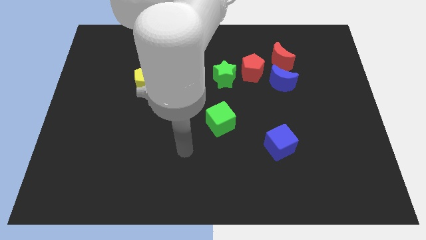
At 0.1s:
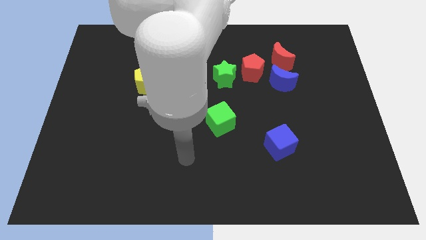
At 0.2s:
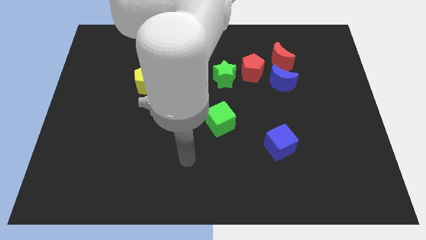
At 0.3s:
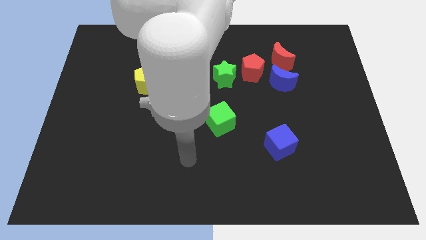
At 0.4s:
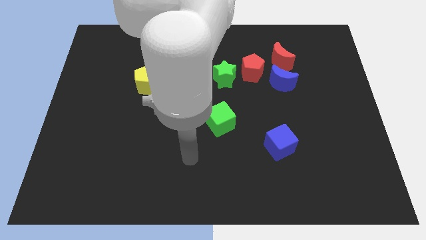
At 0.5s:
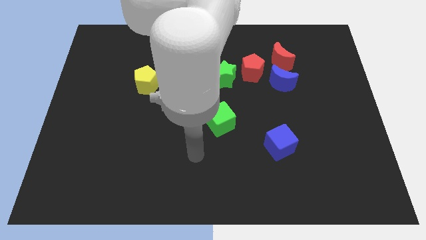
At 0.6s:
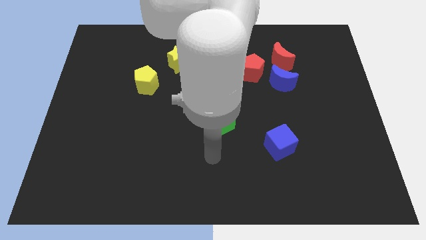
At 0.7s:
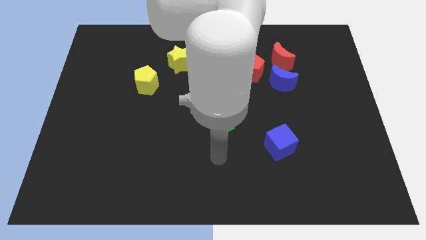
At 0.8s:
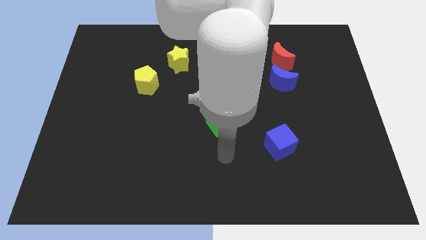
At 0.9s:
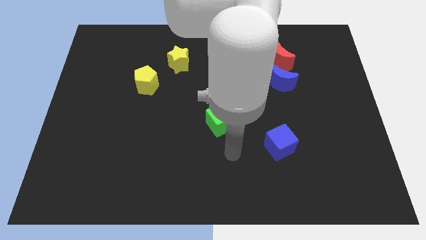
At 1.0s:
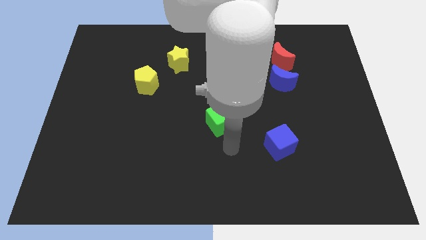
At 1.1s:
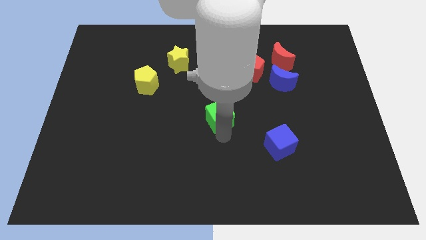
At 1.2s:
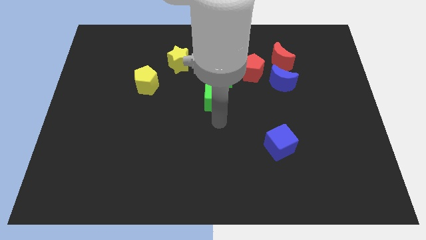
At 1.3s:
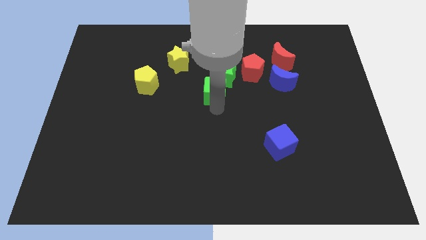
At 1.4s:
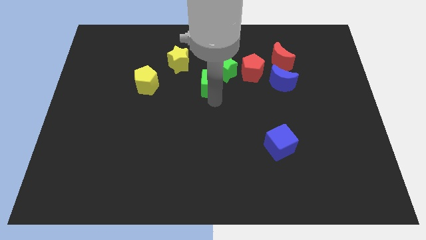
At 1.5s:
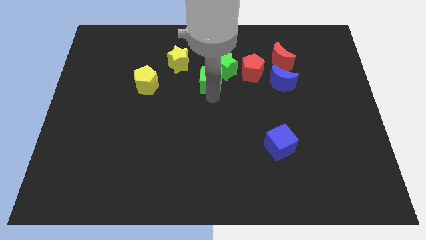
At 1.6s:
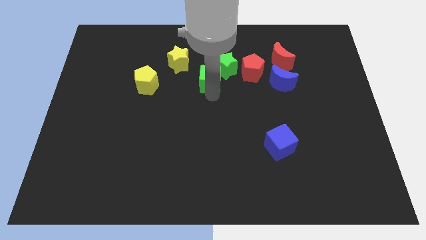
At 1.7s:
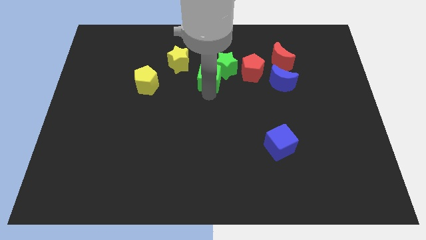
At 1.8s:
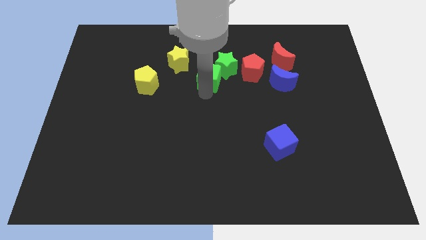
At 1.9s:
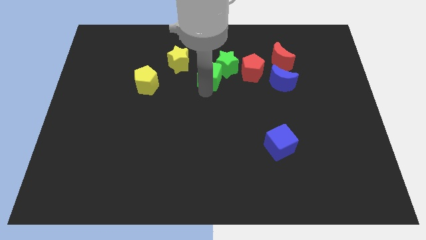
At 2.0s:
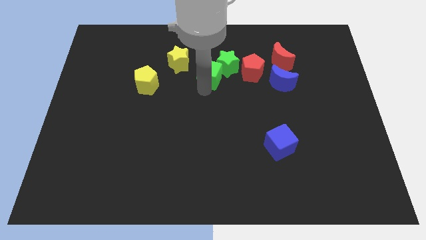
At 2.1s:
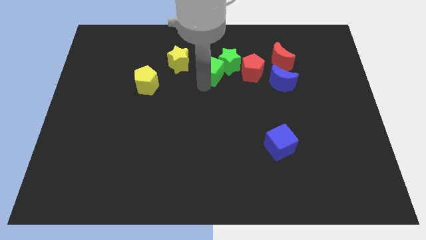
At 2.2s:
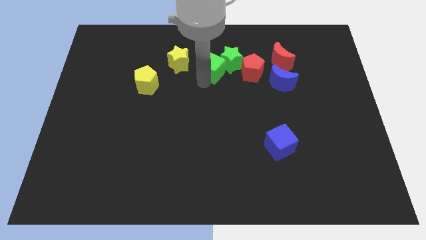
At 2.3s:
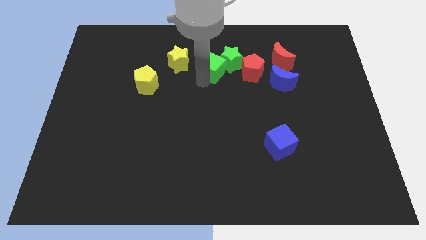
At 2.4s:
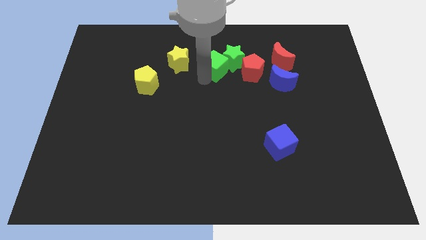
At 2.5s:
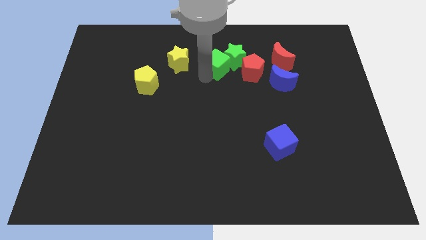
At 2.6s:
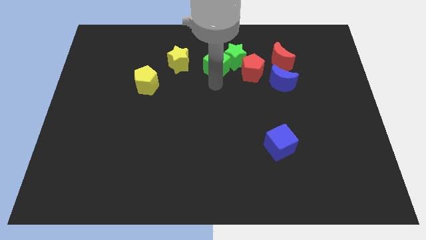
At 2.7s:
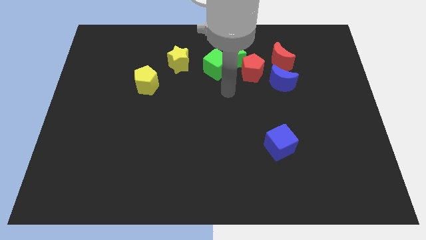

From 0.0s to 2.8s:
move the green cubes to the top

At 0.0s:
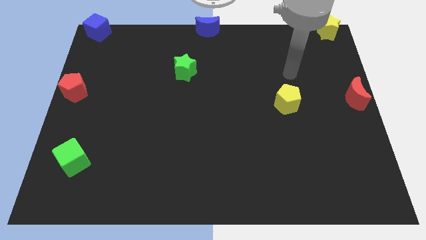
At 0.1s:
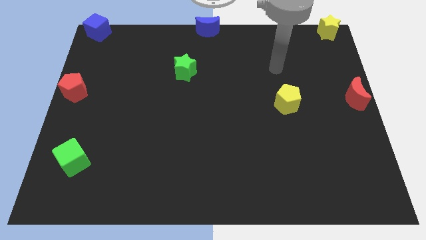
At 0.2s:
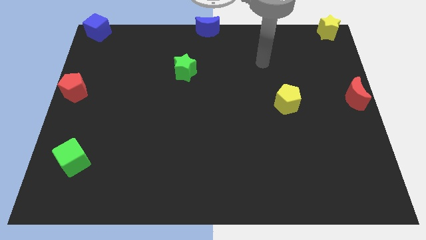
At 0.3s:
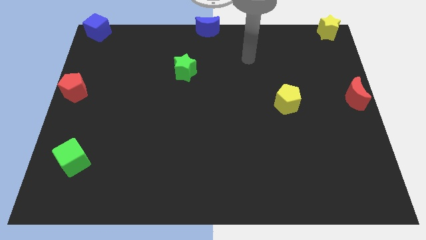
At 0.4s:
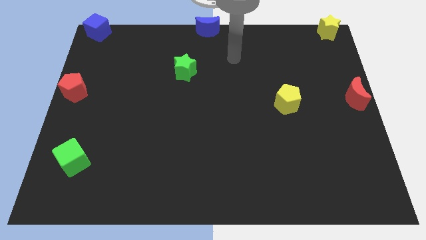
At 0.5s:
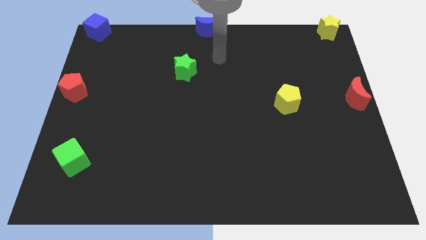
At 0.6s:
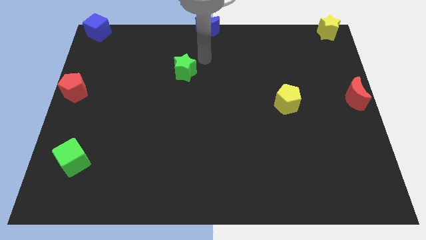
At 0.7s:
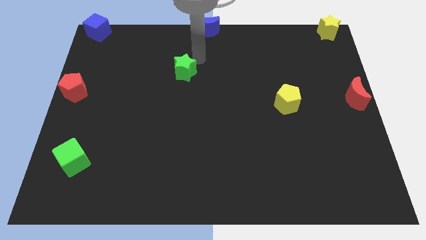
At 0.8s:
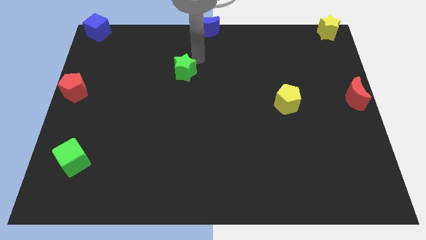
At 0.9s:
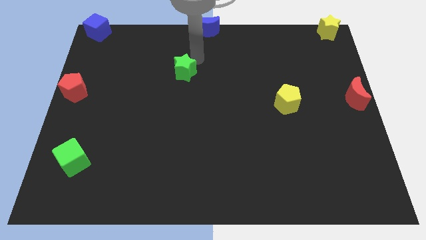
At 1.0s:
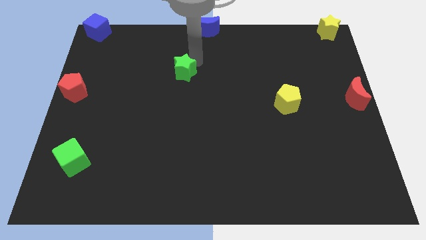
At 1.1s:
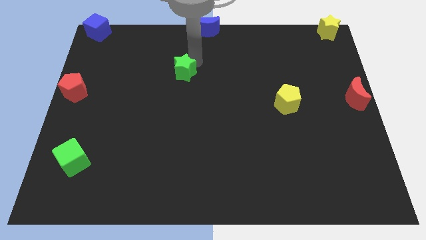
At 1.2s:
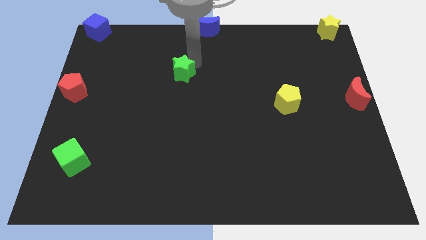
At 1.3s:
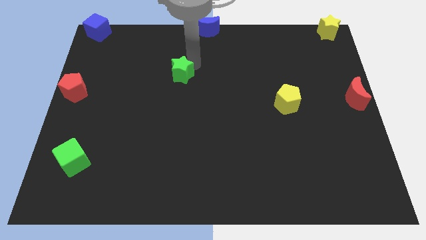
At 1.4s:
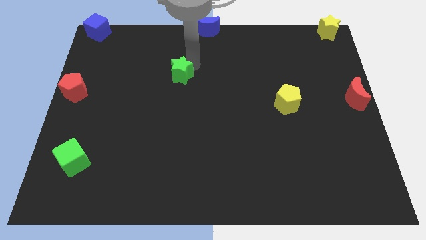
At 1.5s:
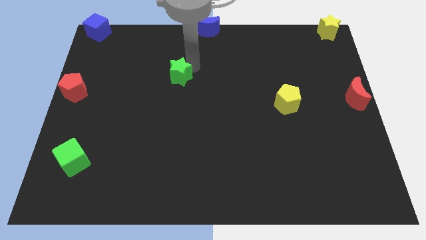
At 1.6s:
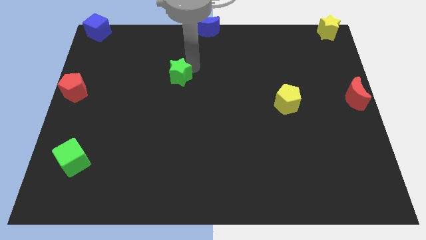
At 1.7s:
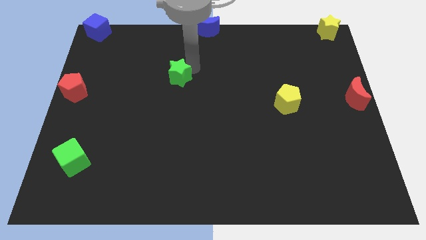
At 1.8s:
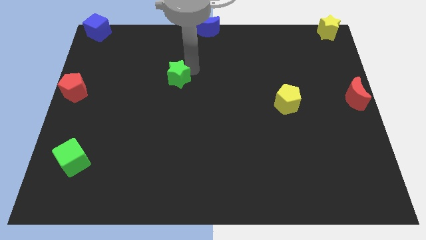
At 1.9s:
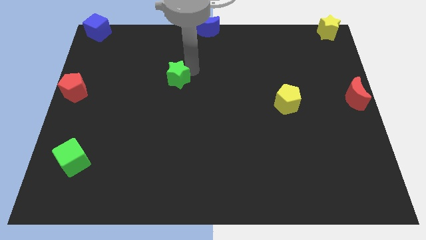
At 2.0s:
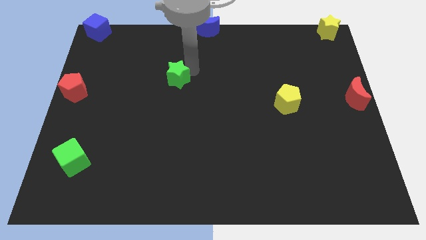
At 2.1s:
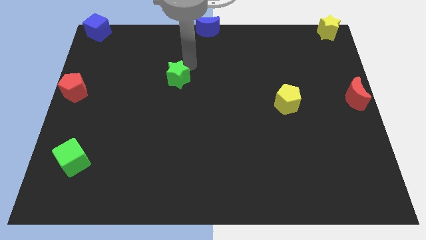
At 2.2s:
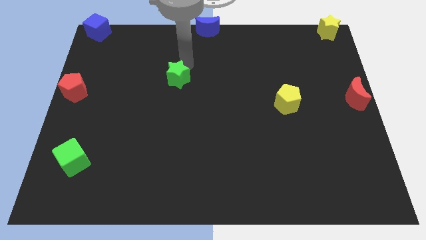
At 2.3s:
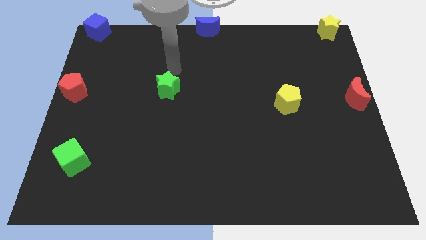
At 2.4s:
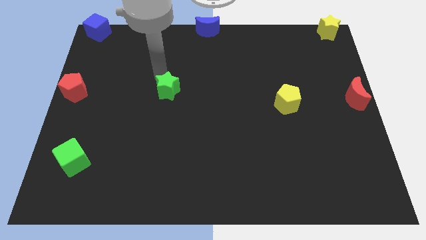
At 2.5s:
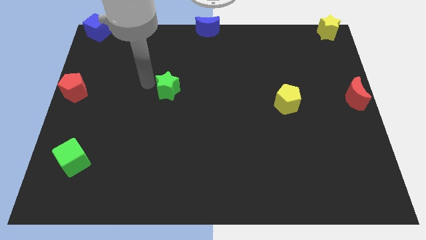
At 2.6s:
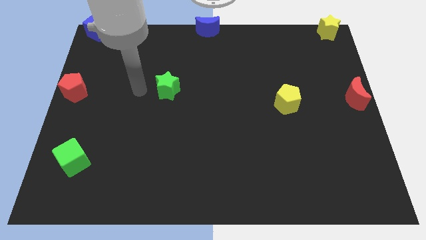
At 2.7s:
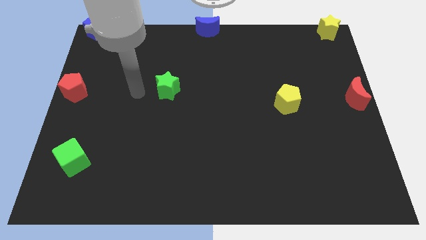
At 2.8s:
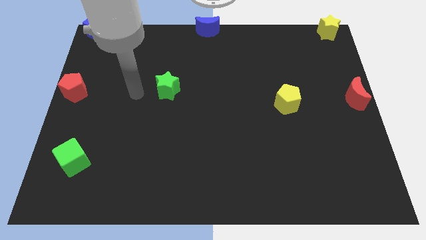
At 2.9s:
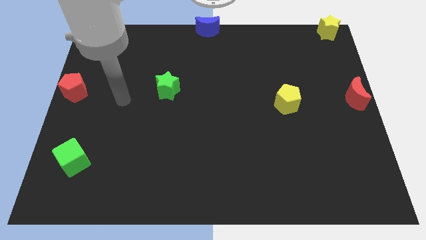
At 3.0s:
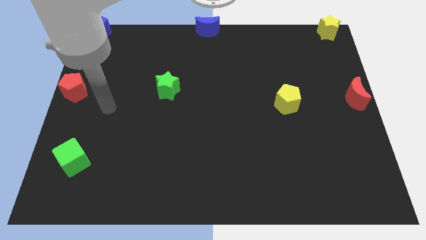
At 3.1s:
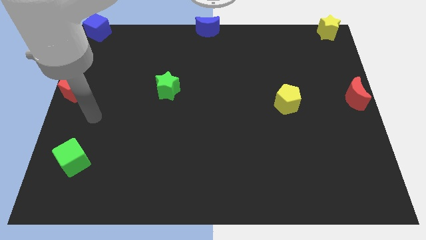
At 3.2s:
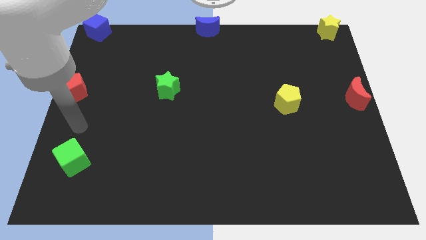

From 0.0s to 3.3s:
put the green star horizontally in between the red pentagon and yellow pentagon

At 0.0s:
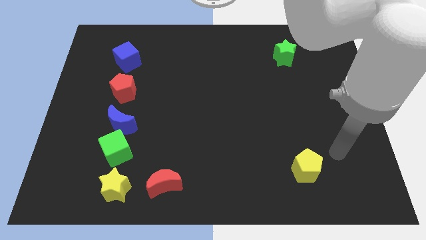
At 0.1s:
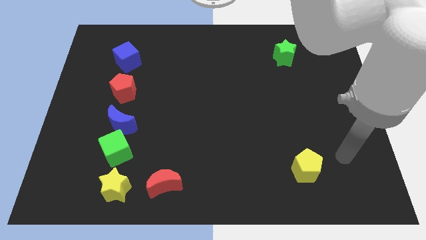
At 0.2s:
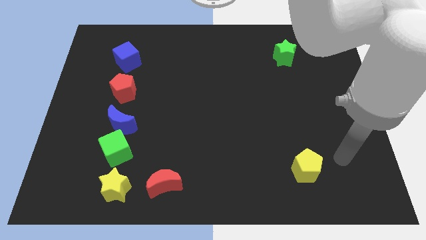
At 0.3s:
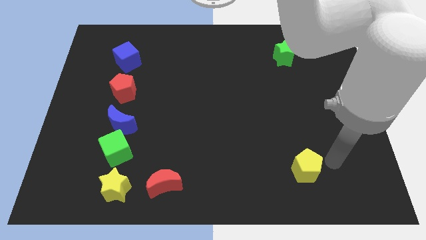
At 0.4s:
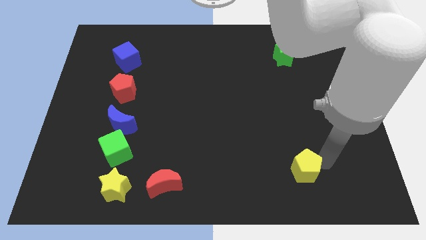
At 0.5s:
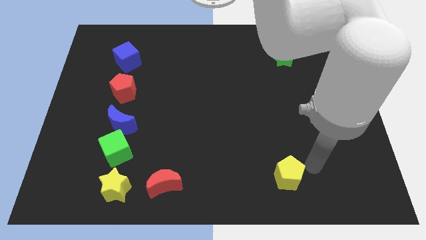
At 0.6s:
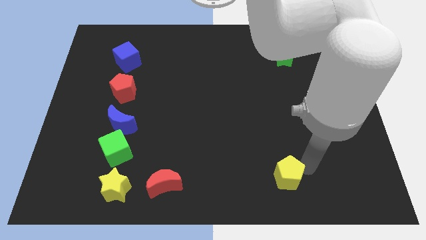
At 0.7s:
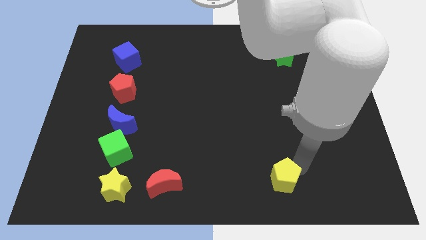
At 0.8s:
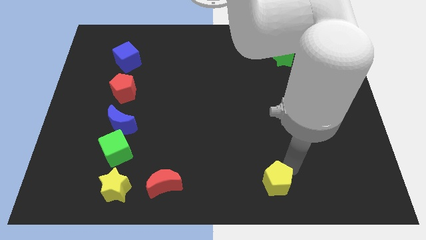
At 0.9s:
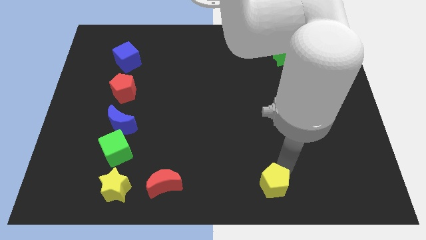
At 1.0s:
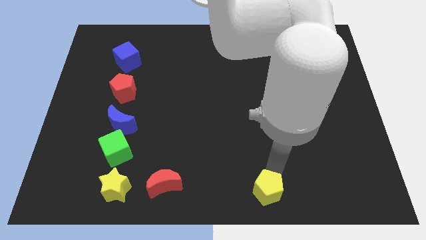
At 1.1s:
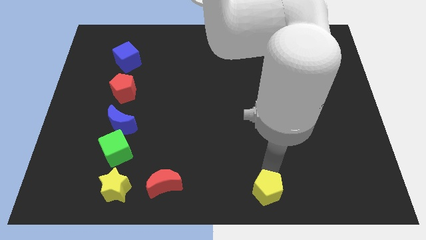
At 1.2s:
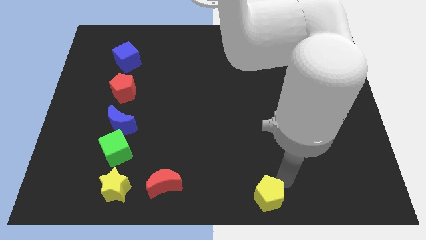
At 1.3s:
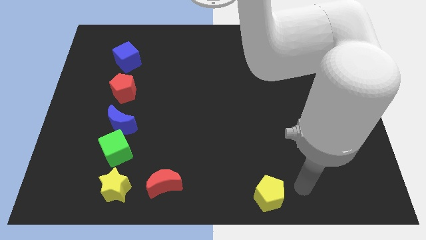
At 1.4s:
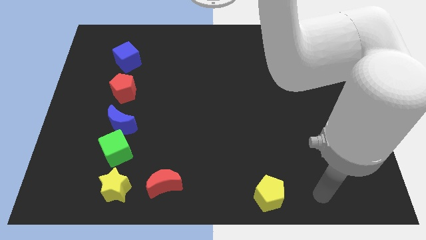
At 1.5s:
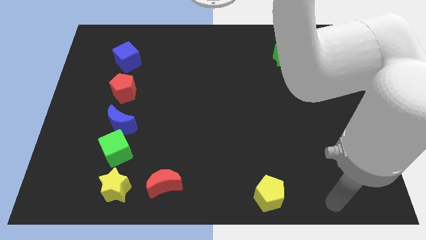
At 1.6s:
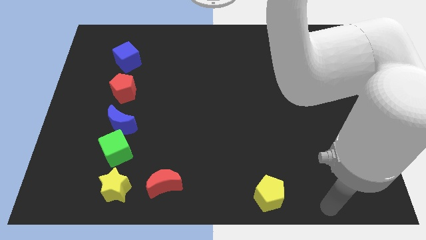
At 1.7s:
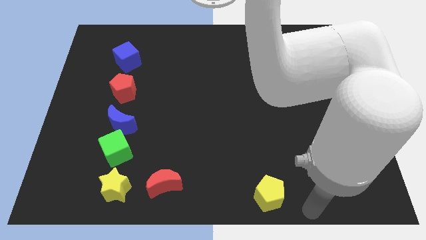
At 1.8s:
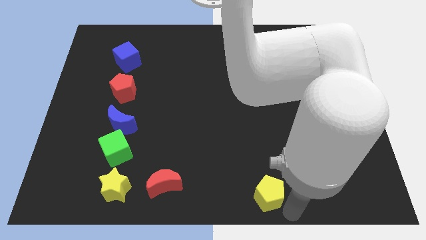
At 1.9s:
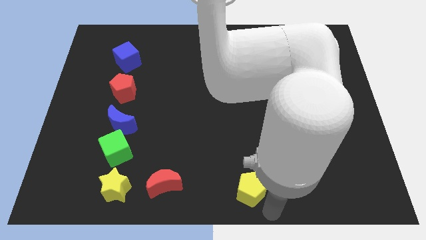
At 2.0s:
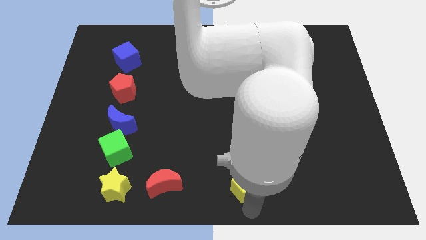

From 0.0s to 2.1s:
move yellow pentagon towards the bottom center

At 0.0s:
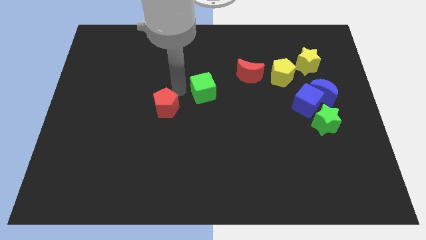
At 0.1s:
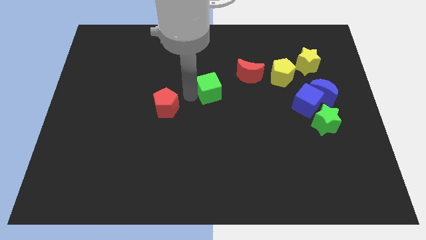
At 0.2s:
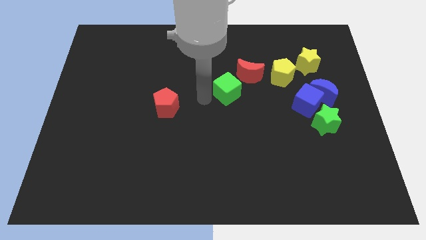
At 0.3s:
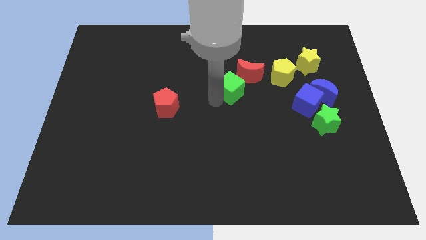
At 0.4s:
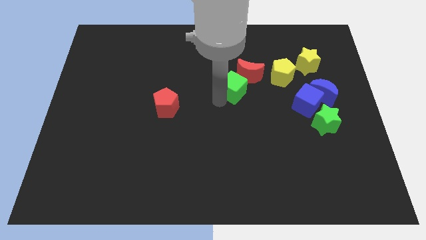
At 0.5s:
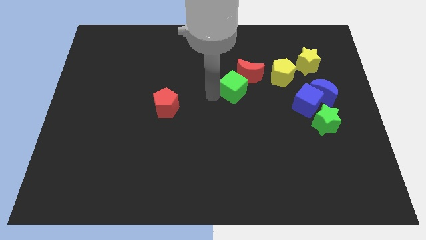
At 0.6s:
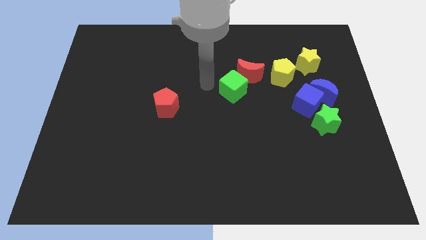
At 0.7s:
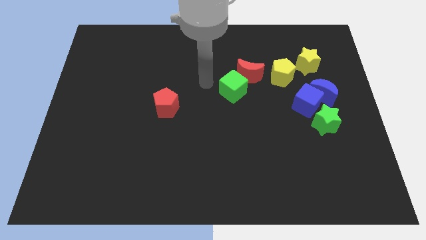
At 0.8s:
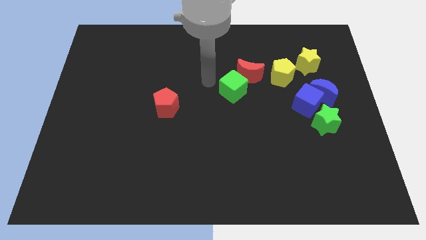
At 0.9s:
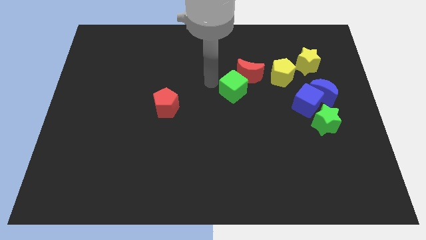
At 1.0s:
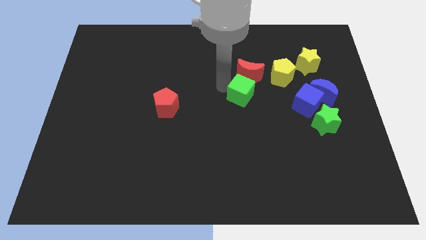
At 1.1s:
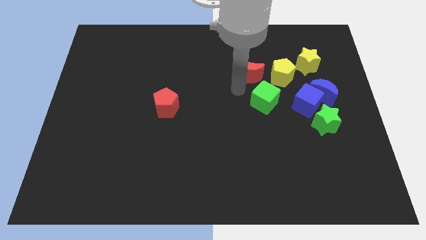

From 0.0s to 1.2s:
place green block below red pentagon
